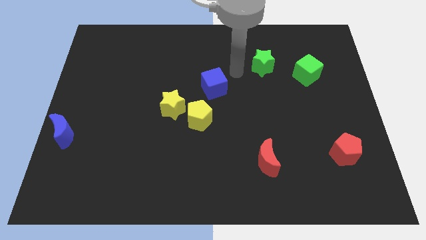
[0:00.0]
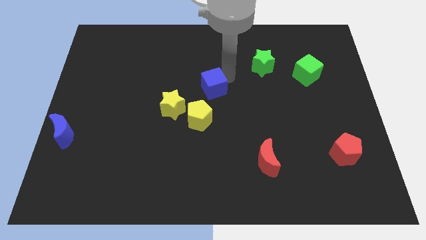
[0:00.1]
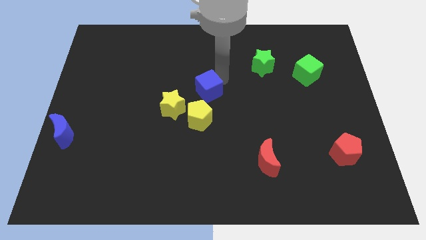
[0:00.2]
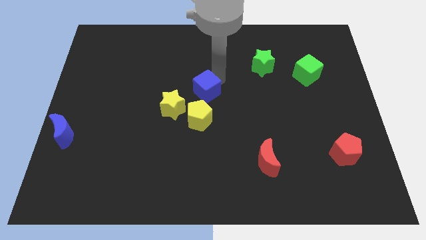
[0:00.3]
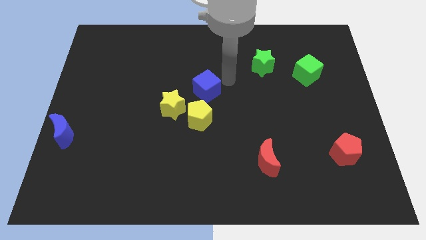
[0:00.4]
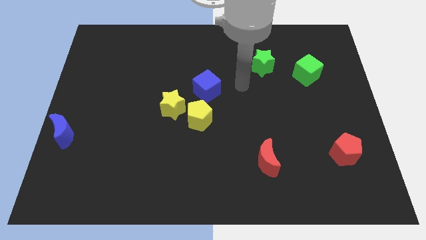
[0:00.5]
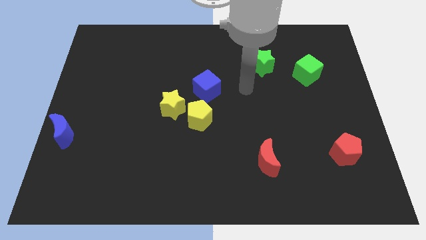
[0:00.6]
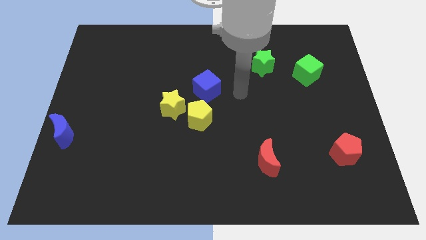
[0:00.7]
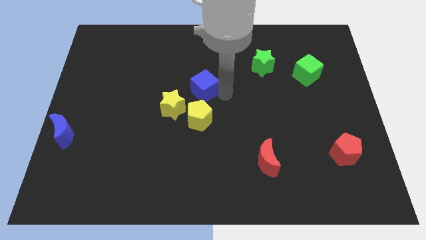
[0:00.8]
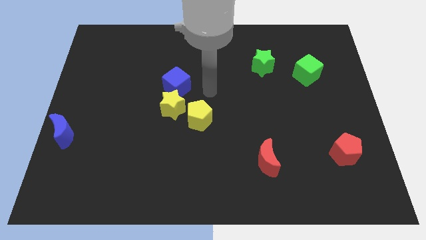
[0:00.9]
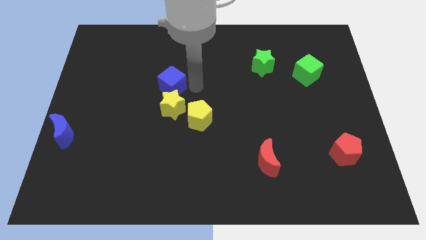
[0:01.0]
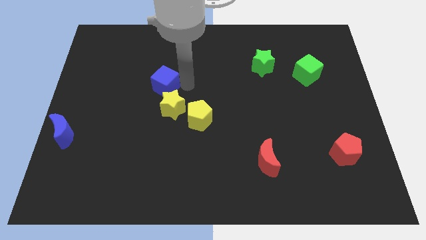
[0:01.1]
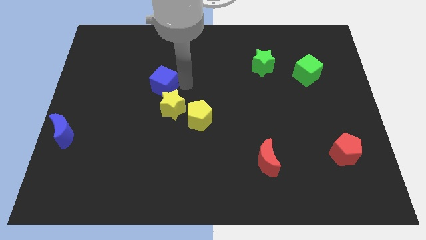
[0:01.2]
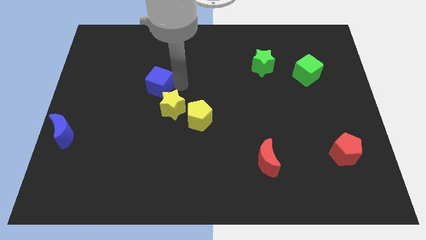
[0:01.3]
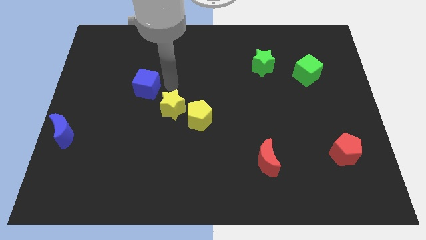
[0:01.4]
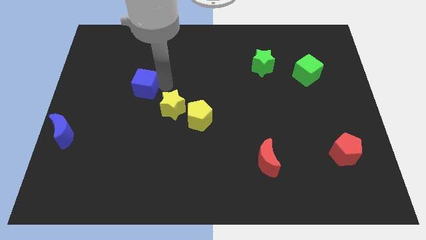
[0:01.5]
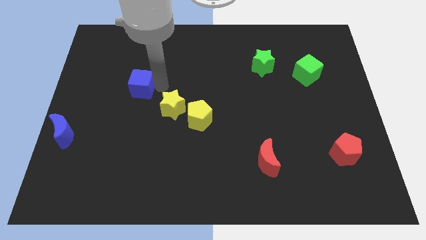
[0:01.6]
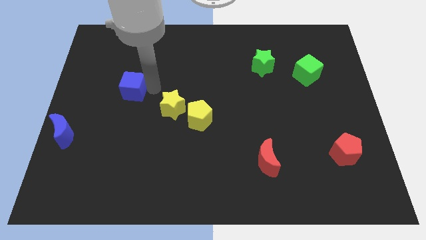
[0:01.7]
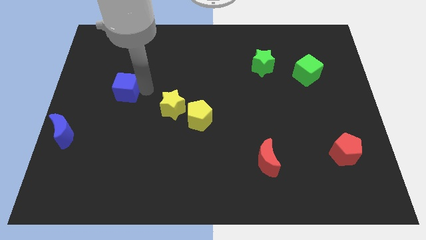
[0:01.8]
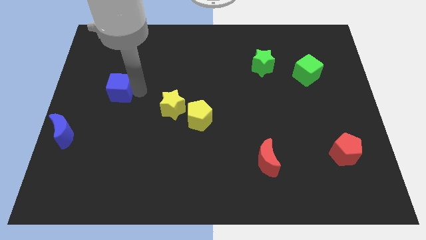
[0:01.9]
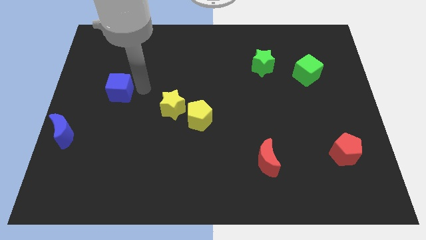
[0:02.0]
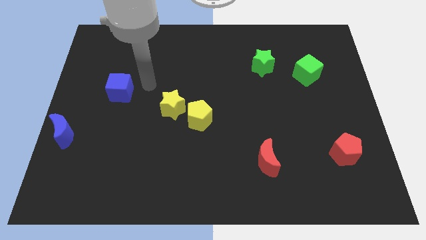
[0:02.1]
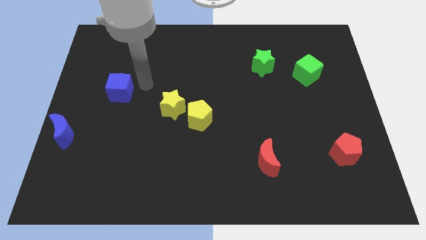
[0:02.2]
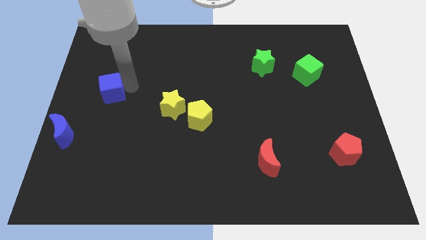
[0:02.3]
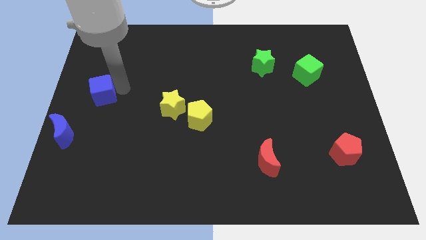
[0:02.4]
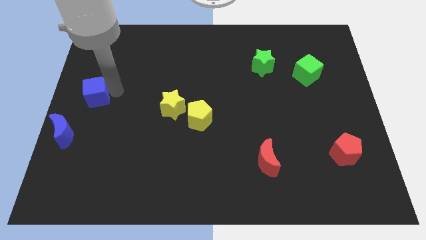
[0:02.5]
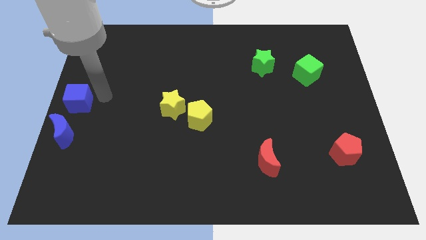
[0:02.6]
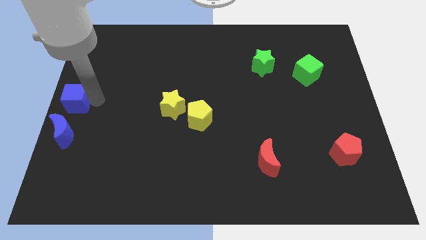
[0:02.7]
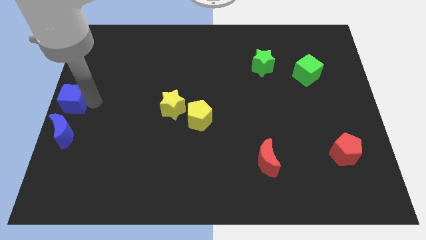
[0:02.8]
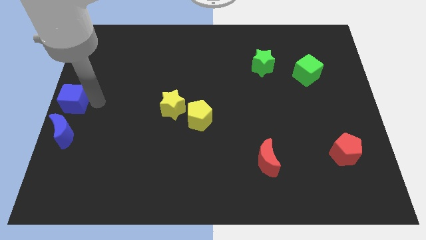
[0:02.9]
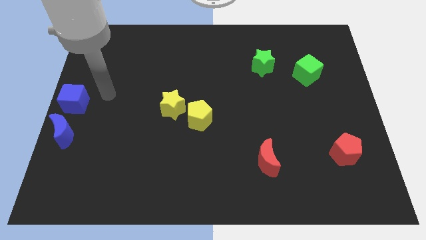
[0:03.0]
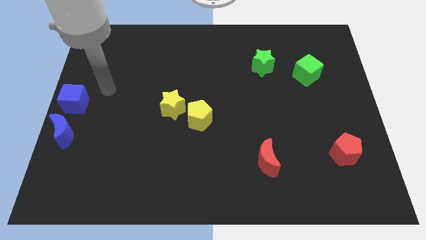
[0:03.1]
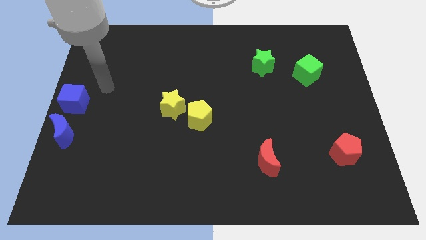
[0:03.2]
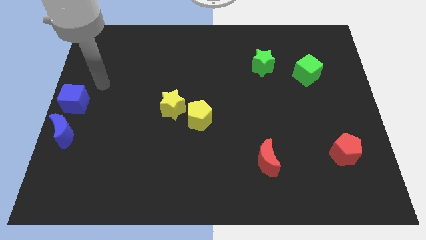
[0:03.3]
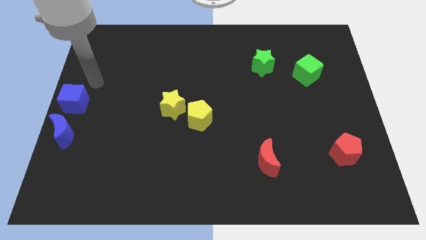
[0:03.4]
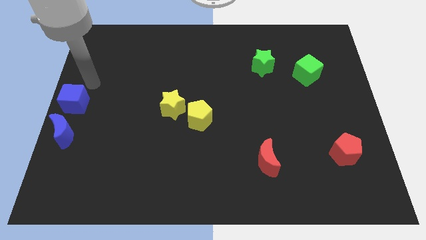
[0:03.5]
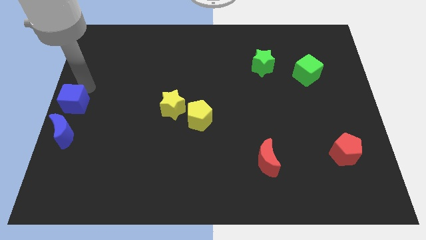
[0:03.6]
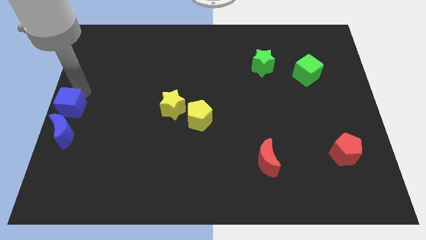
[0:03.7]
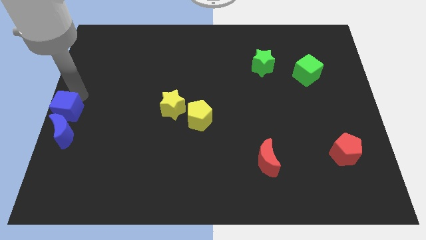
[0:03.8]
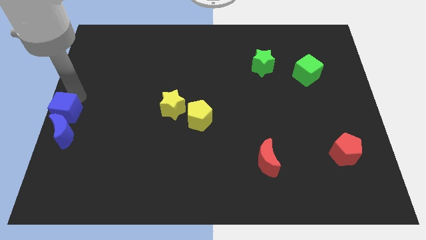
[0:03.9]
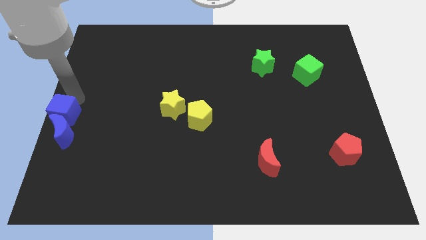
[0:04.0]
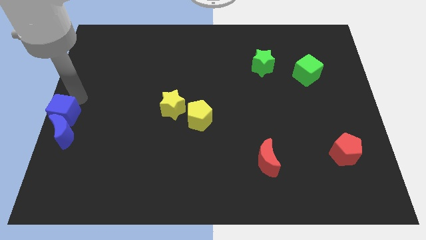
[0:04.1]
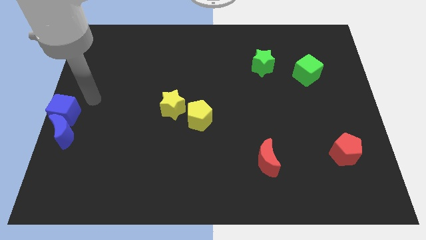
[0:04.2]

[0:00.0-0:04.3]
drag the blue cube to the top side of the blue moon

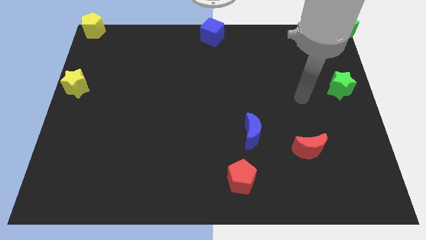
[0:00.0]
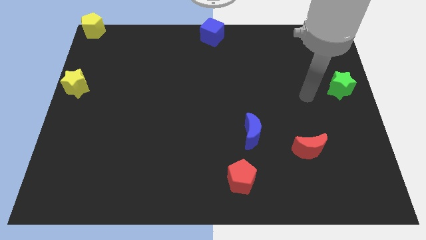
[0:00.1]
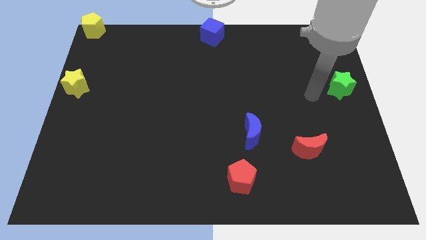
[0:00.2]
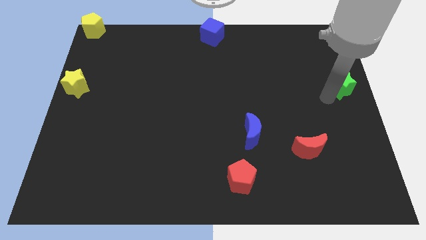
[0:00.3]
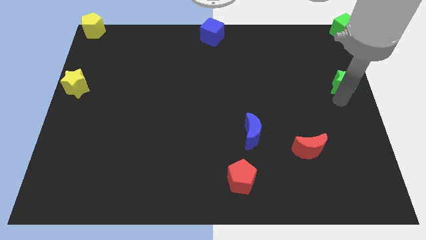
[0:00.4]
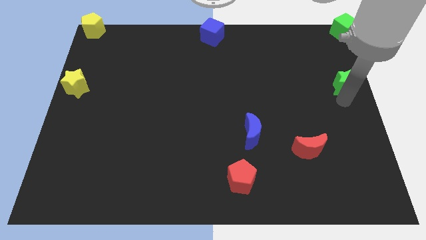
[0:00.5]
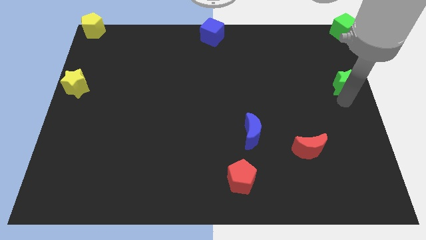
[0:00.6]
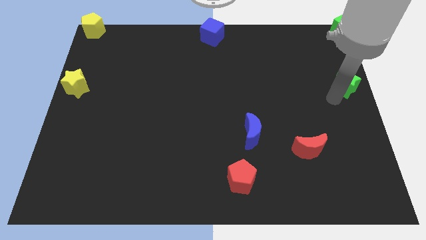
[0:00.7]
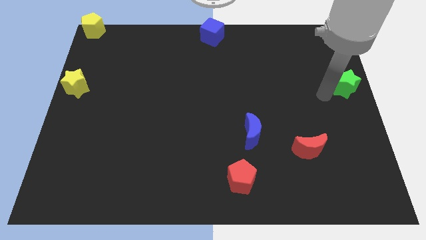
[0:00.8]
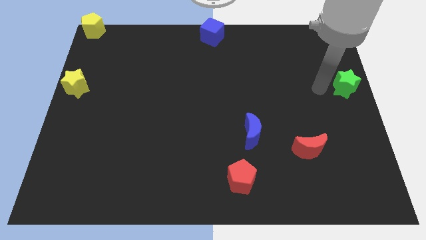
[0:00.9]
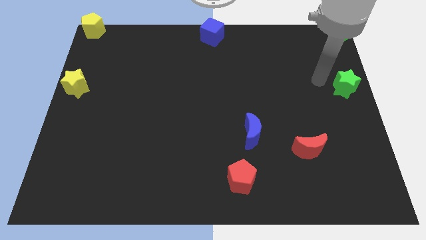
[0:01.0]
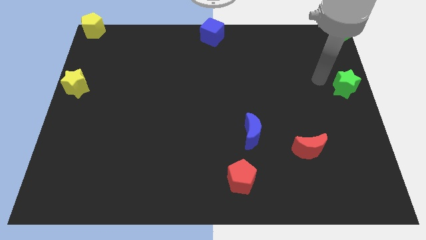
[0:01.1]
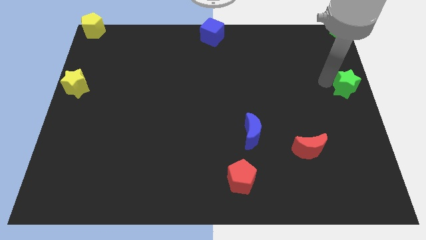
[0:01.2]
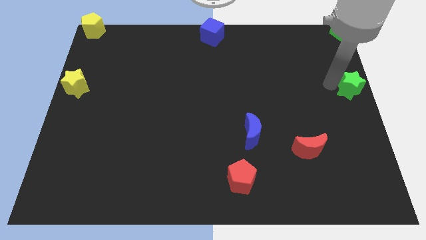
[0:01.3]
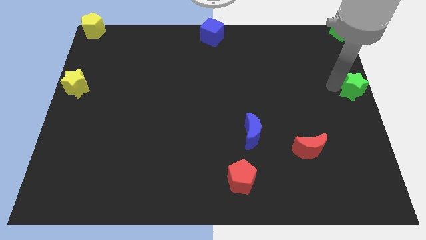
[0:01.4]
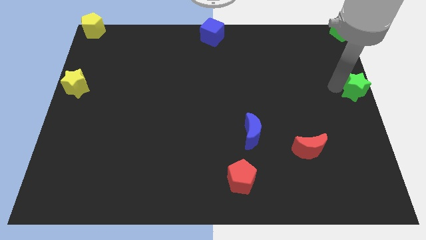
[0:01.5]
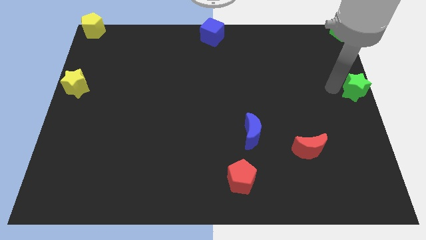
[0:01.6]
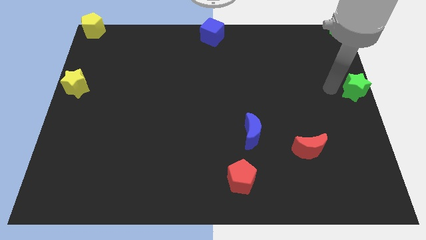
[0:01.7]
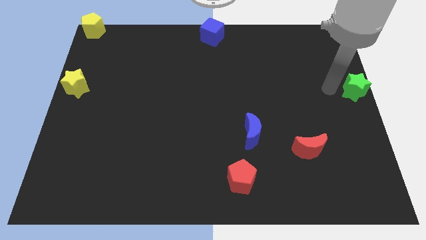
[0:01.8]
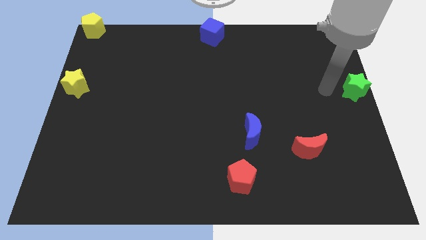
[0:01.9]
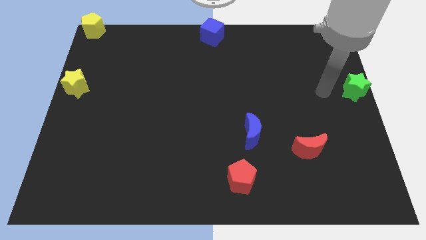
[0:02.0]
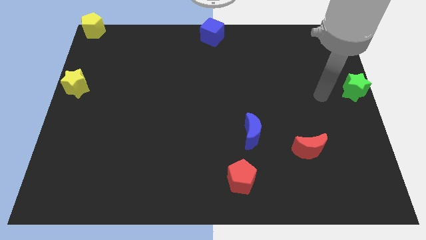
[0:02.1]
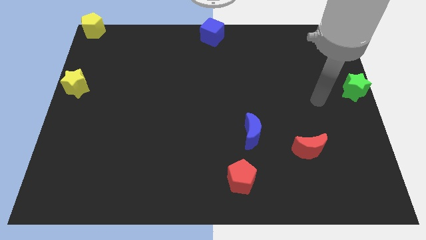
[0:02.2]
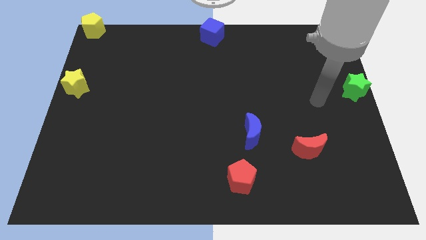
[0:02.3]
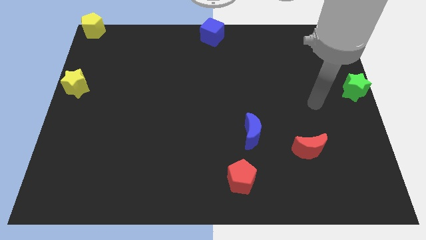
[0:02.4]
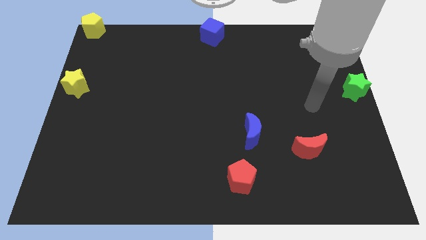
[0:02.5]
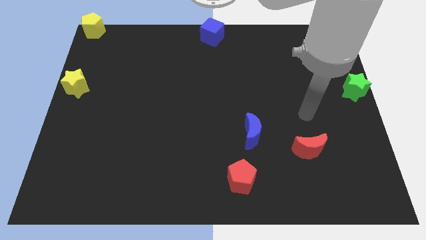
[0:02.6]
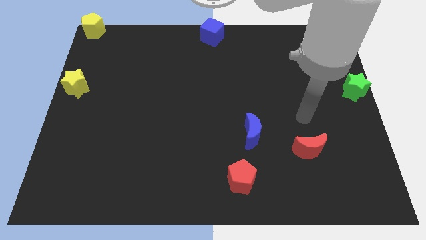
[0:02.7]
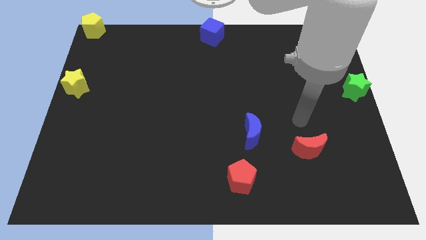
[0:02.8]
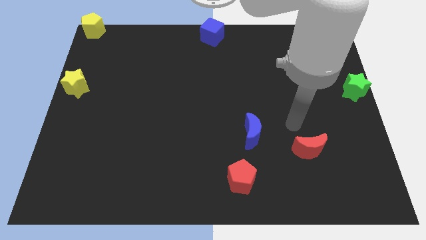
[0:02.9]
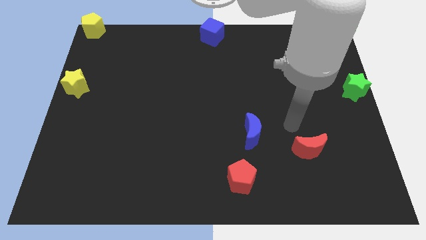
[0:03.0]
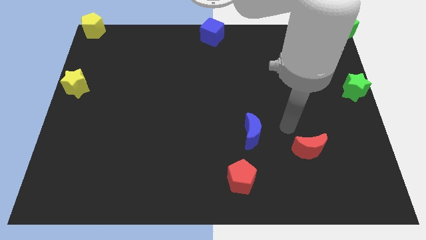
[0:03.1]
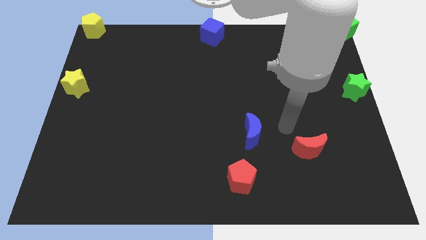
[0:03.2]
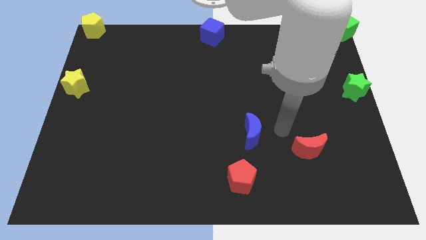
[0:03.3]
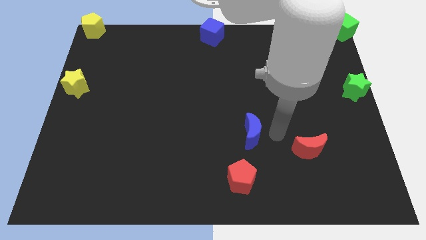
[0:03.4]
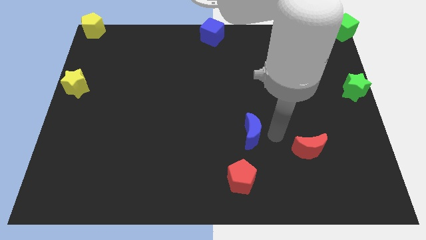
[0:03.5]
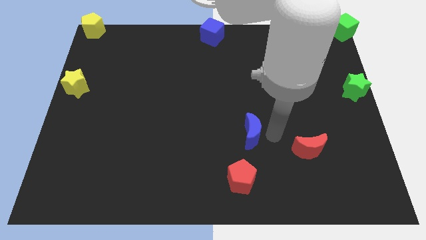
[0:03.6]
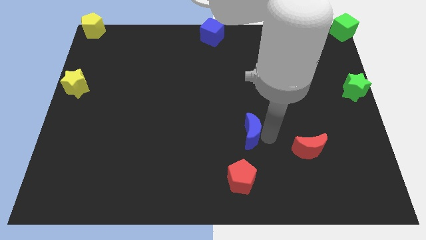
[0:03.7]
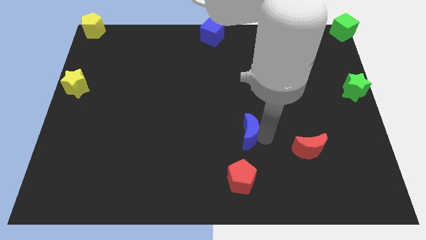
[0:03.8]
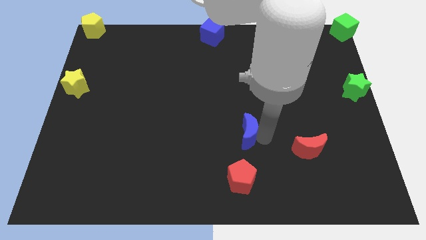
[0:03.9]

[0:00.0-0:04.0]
move your arm towards blue moon

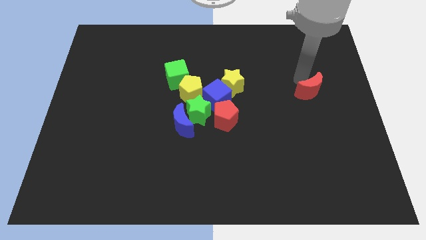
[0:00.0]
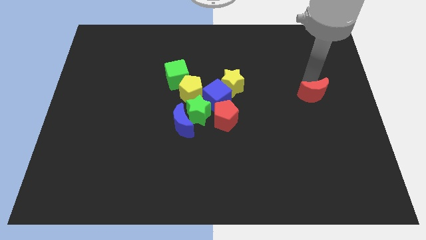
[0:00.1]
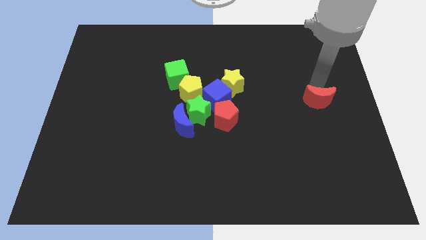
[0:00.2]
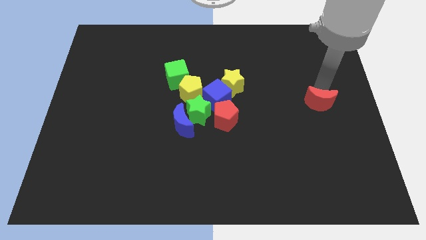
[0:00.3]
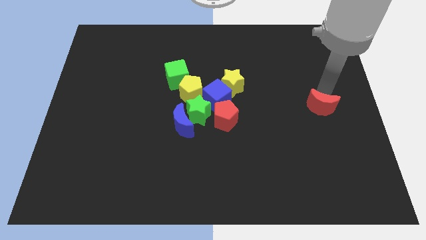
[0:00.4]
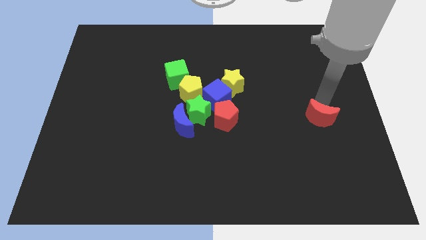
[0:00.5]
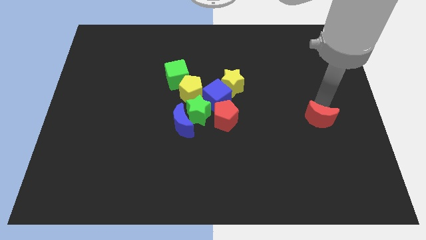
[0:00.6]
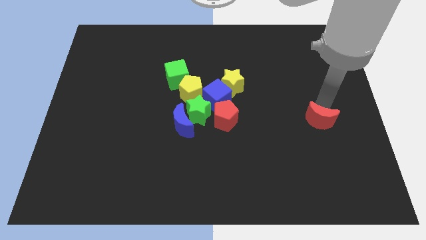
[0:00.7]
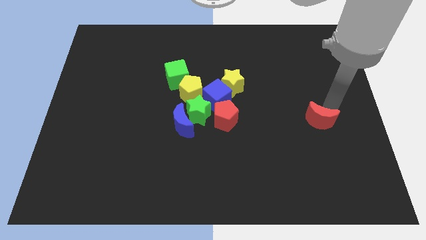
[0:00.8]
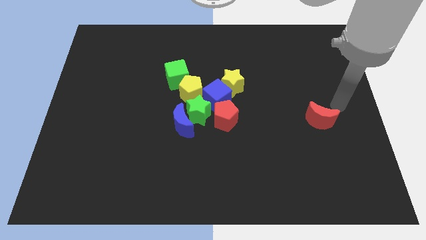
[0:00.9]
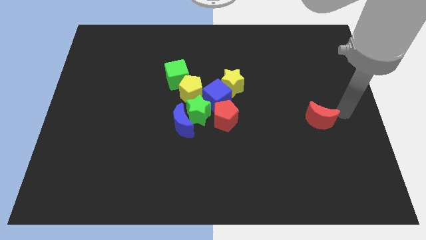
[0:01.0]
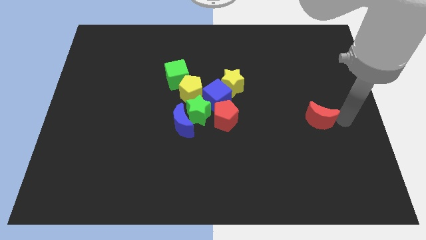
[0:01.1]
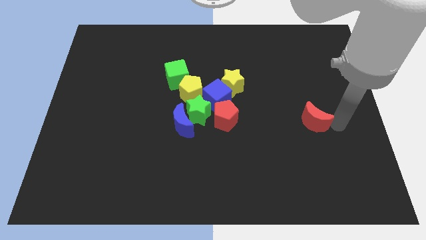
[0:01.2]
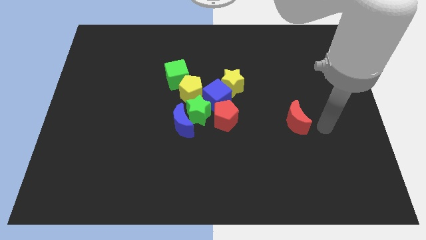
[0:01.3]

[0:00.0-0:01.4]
place the red crescent horizontally parallel to the red pentagon
